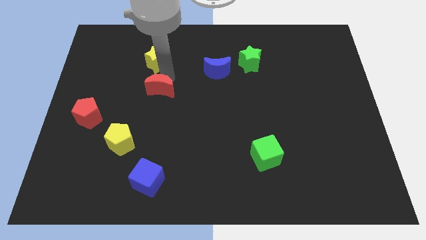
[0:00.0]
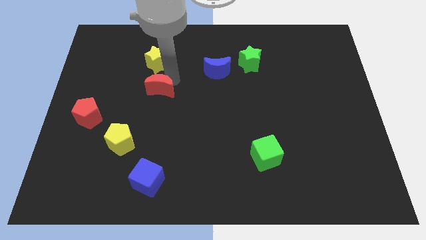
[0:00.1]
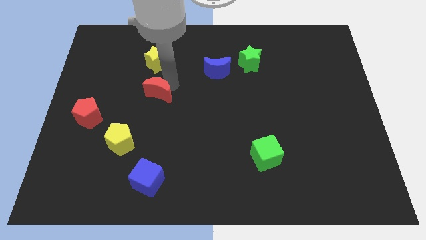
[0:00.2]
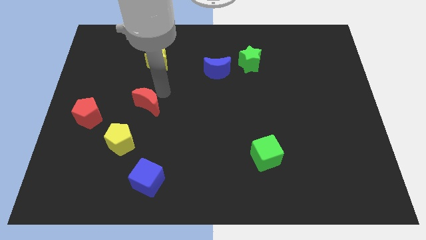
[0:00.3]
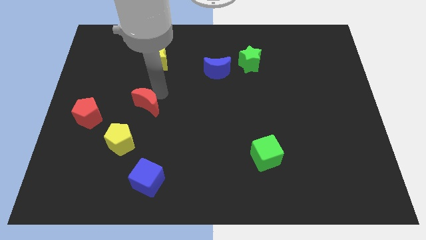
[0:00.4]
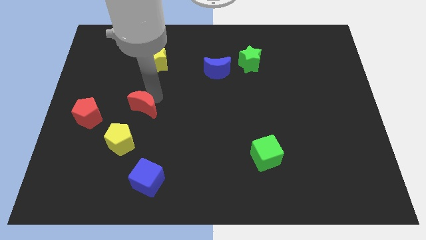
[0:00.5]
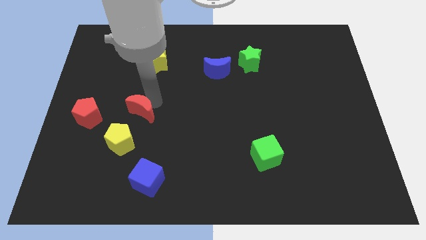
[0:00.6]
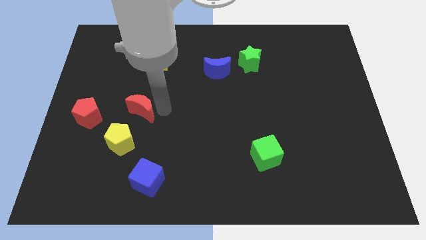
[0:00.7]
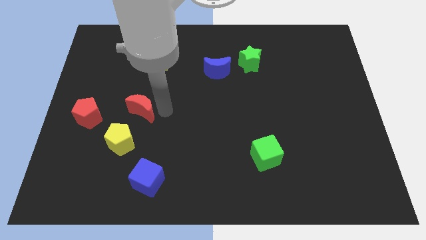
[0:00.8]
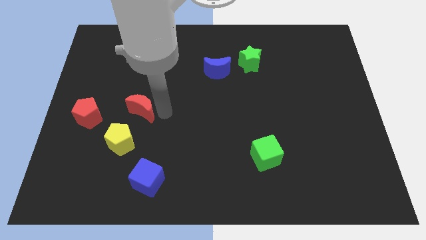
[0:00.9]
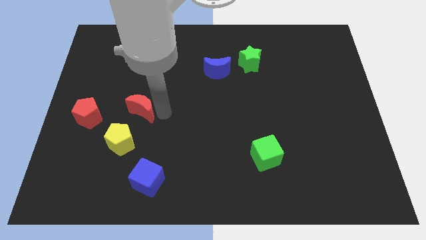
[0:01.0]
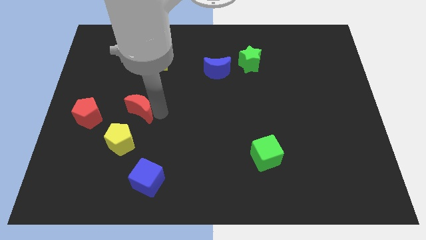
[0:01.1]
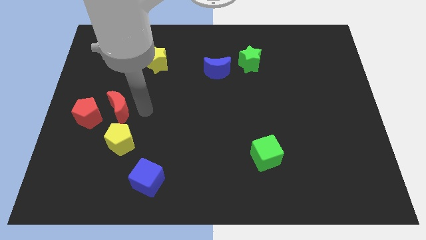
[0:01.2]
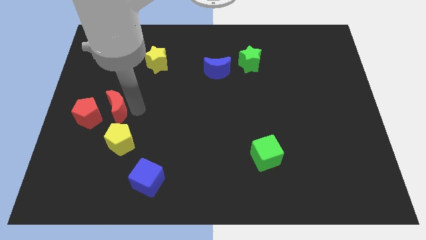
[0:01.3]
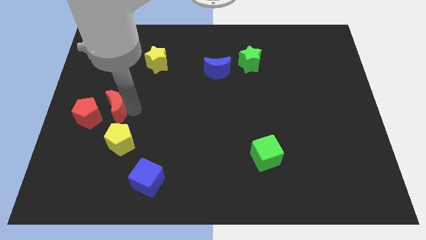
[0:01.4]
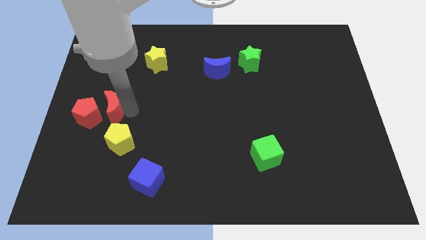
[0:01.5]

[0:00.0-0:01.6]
move the red crescent to the right of the red pentagon

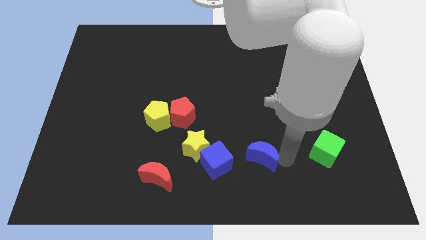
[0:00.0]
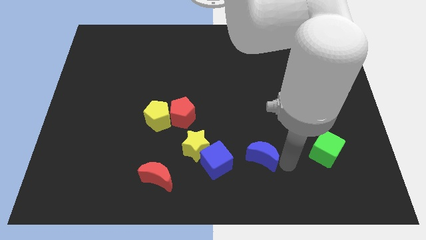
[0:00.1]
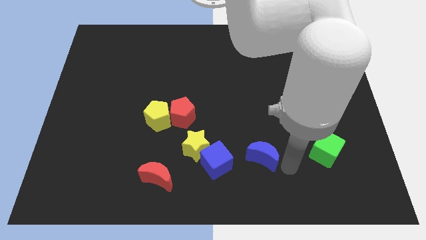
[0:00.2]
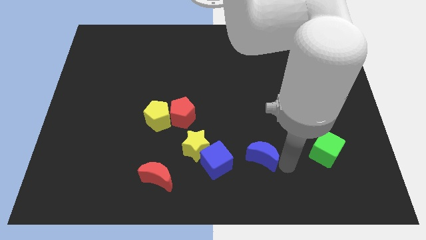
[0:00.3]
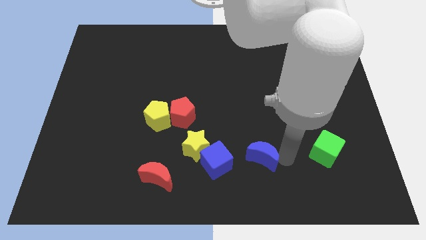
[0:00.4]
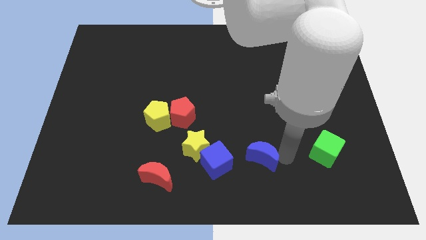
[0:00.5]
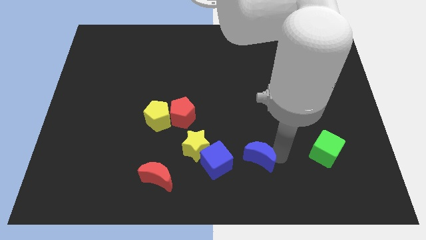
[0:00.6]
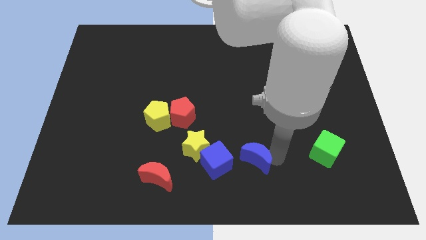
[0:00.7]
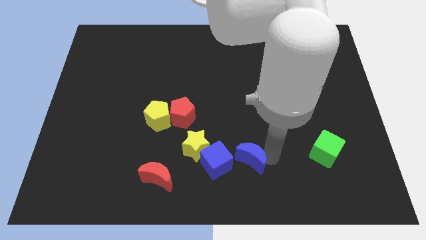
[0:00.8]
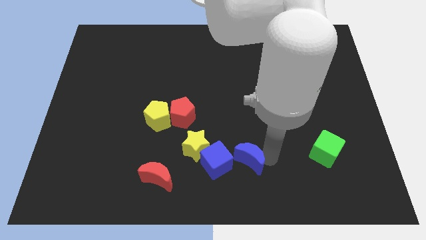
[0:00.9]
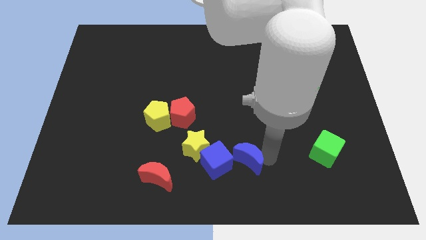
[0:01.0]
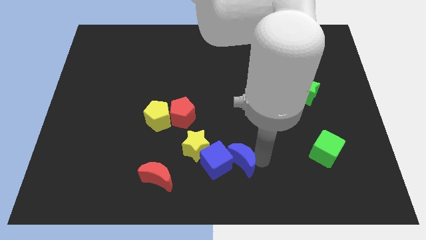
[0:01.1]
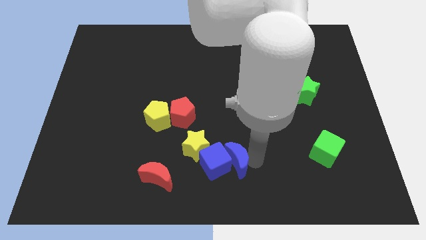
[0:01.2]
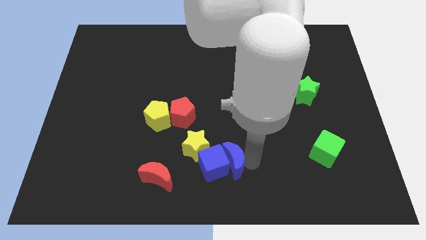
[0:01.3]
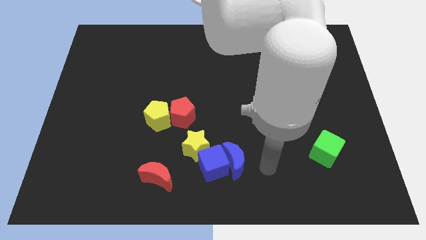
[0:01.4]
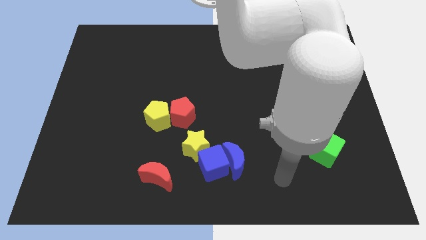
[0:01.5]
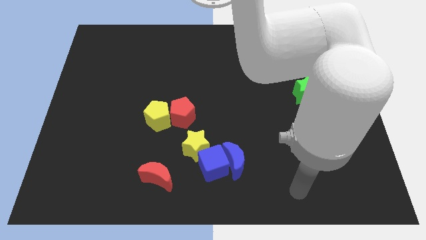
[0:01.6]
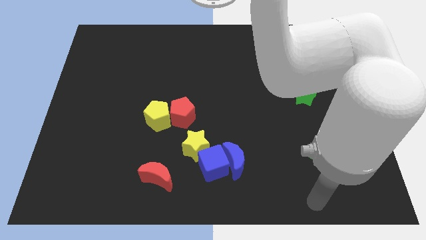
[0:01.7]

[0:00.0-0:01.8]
push the blue crescent into the blue cube

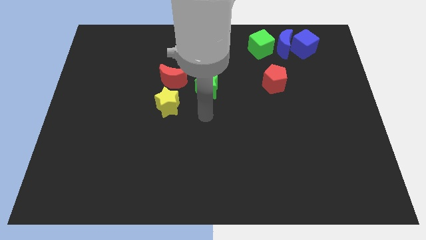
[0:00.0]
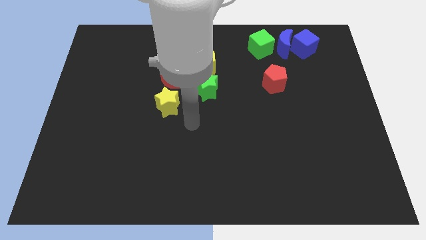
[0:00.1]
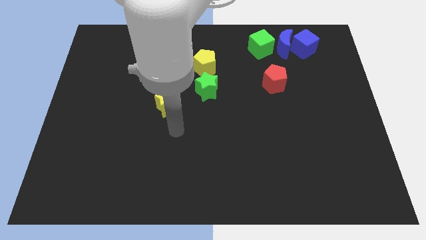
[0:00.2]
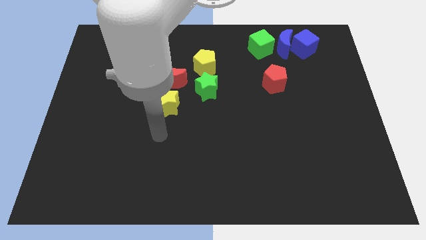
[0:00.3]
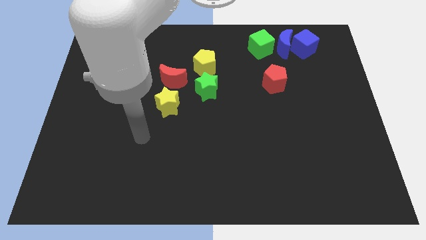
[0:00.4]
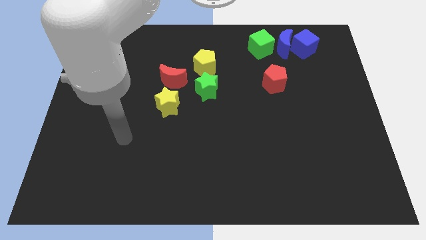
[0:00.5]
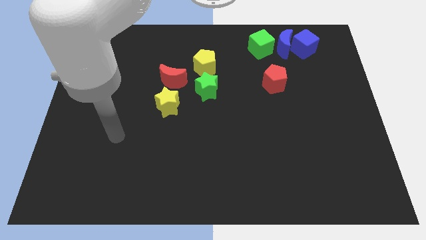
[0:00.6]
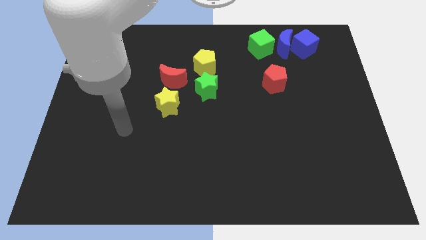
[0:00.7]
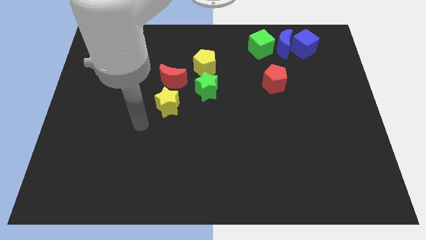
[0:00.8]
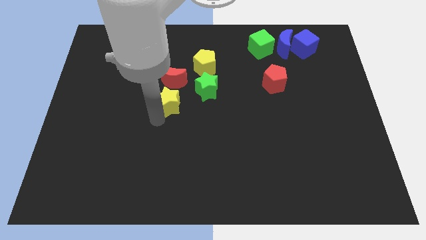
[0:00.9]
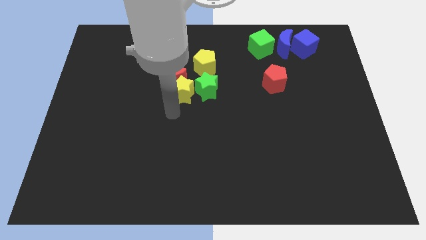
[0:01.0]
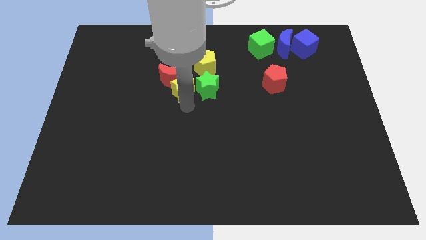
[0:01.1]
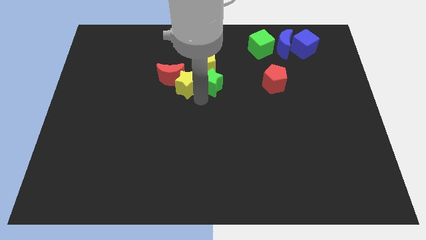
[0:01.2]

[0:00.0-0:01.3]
push the yellow star to the left of the green star

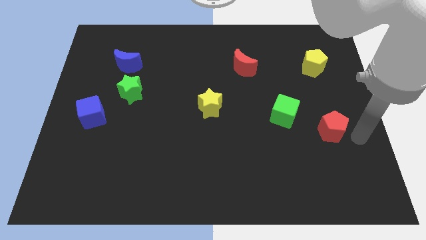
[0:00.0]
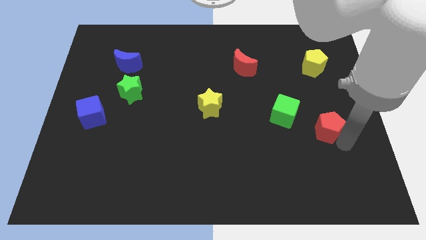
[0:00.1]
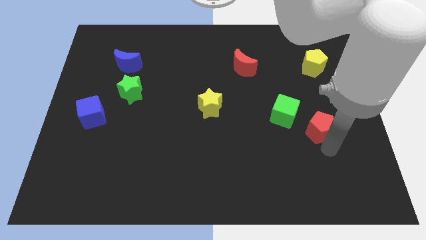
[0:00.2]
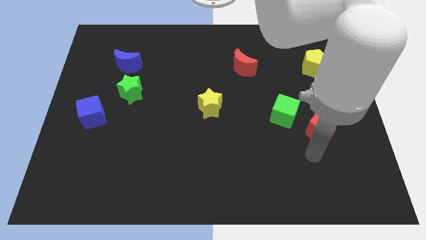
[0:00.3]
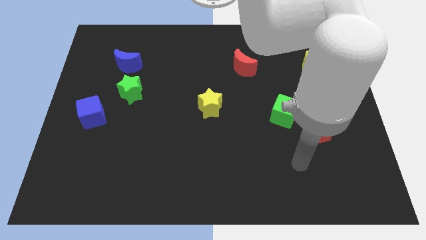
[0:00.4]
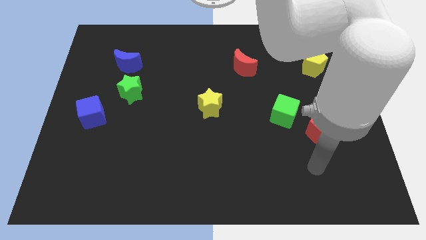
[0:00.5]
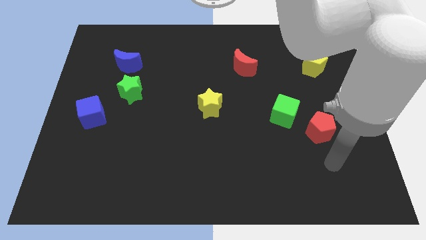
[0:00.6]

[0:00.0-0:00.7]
slightly move the red pentagon to the left

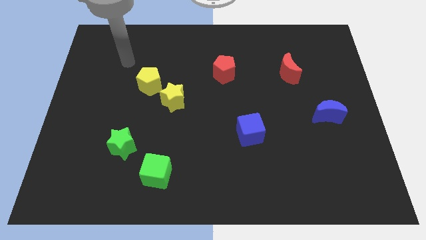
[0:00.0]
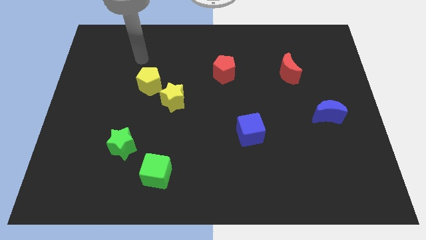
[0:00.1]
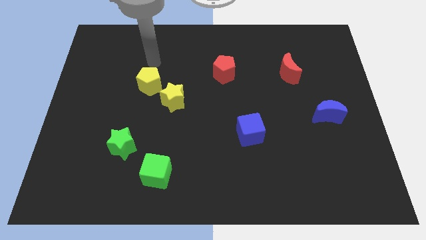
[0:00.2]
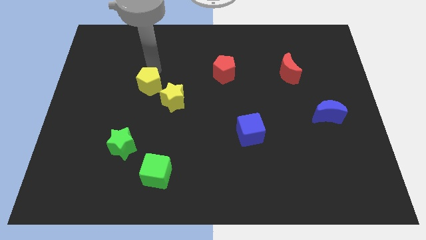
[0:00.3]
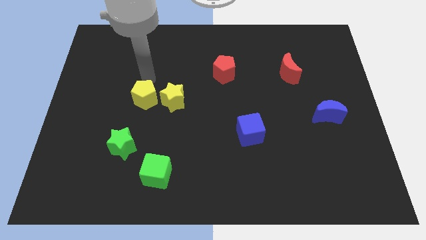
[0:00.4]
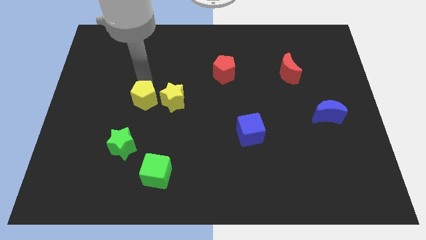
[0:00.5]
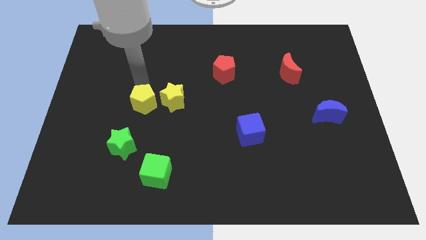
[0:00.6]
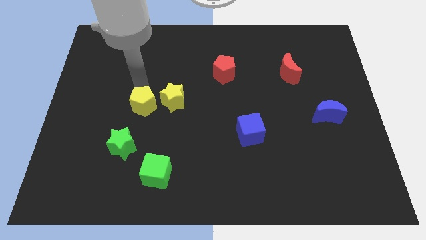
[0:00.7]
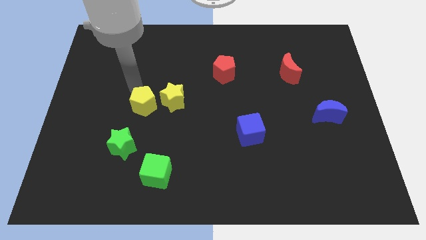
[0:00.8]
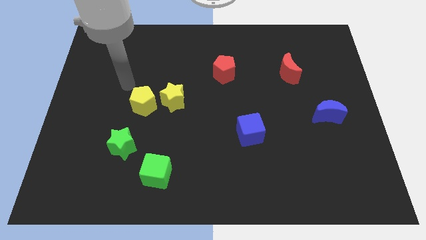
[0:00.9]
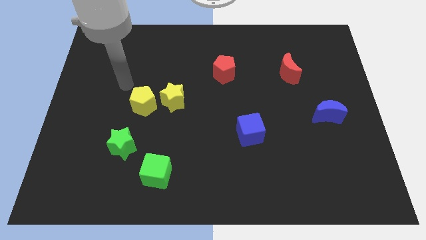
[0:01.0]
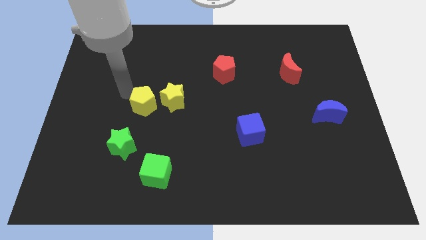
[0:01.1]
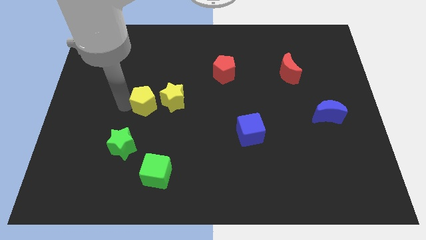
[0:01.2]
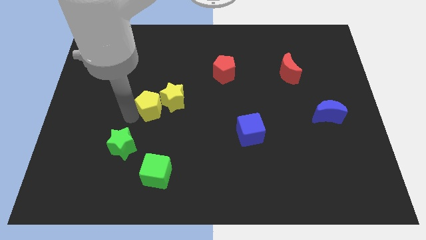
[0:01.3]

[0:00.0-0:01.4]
move the yellow pentagon to the left of the yellow star

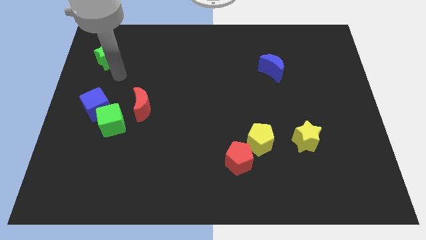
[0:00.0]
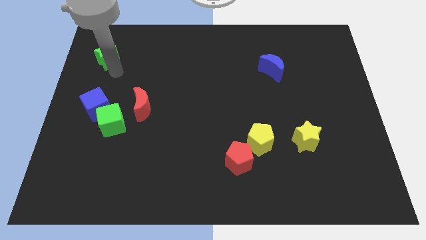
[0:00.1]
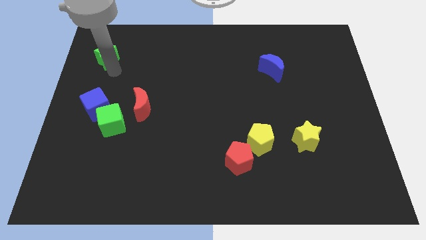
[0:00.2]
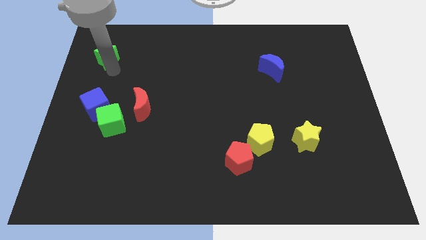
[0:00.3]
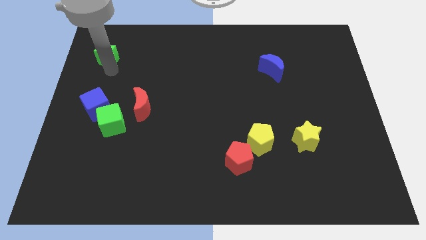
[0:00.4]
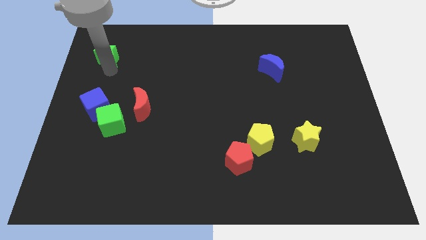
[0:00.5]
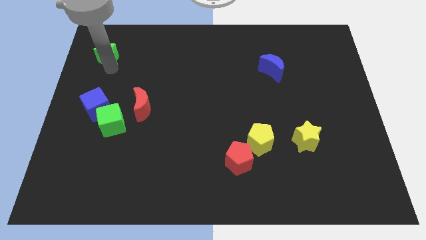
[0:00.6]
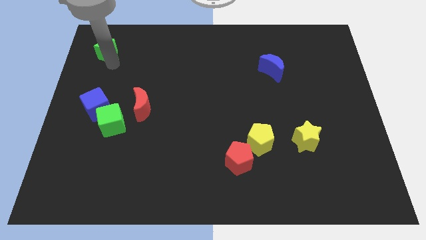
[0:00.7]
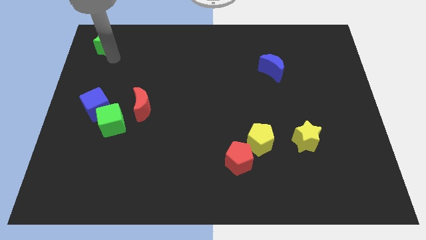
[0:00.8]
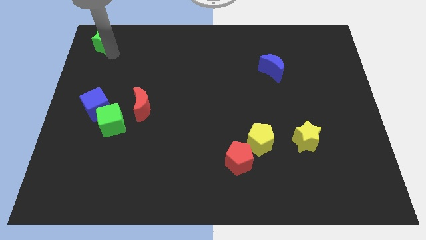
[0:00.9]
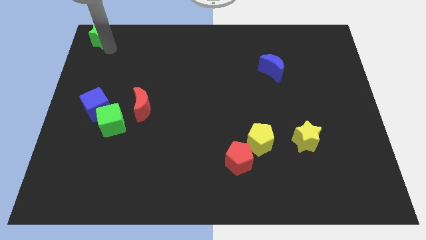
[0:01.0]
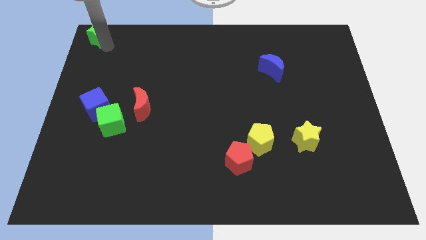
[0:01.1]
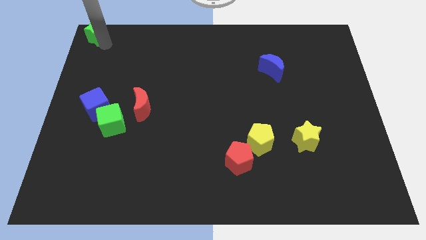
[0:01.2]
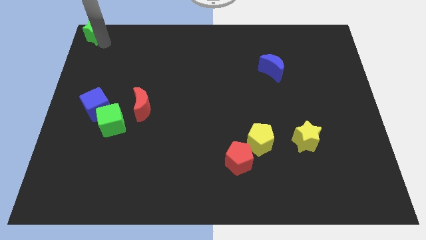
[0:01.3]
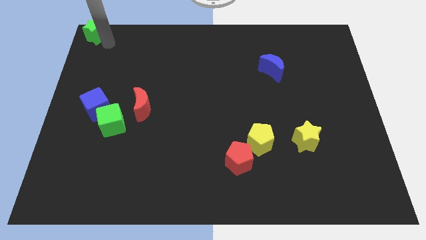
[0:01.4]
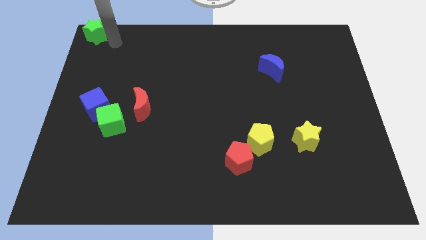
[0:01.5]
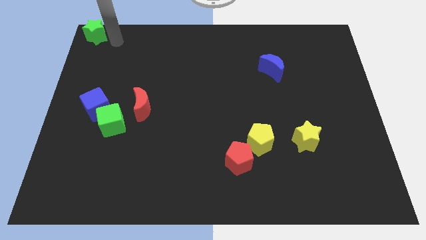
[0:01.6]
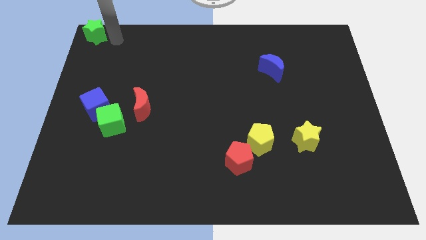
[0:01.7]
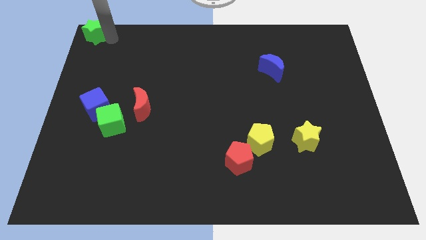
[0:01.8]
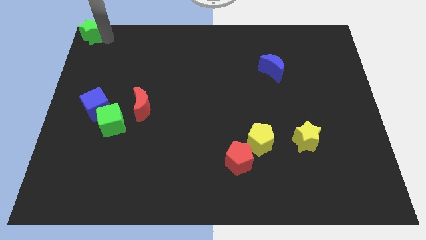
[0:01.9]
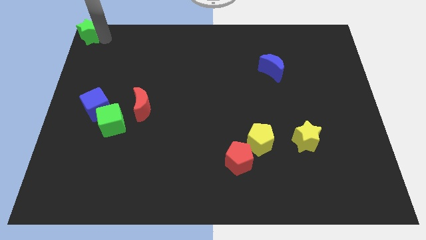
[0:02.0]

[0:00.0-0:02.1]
push green star to the top left
